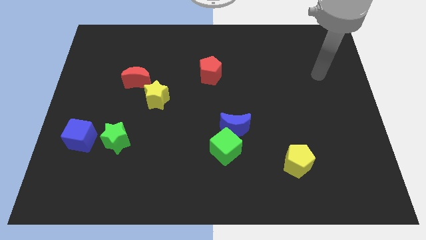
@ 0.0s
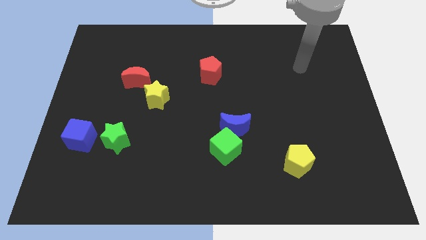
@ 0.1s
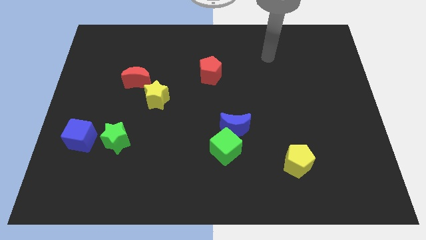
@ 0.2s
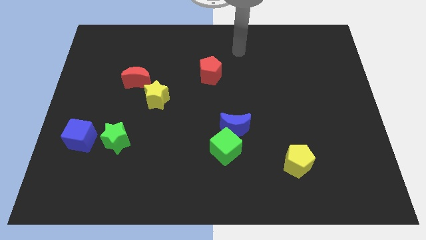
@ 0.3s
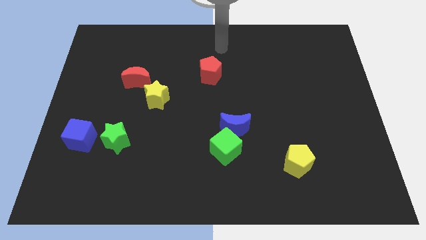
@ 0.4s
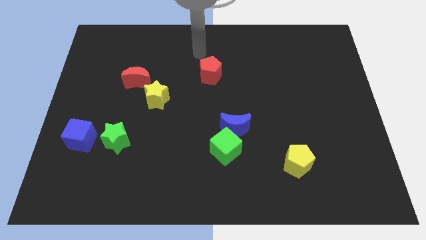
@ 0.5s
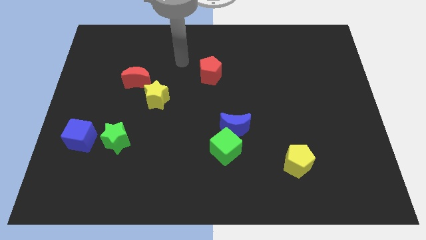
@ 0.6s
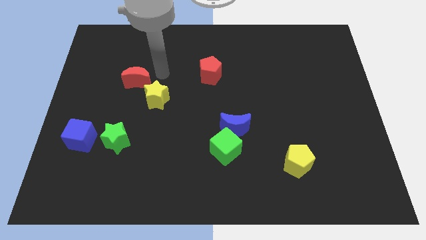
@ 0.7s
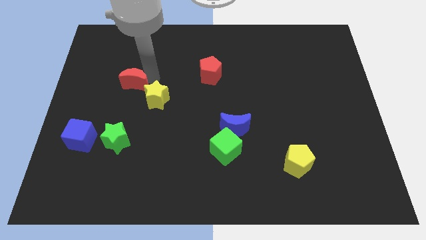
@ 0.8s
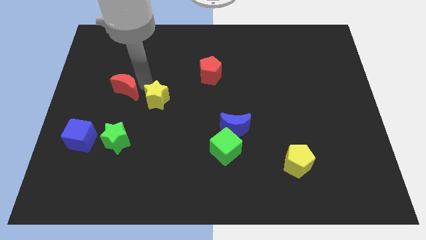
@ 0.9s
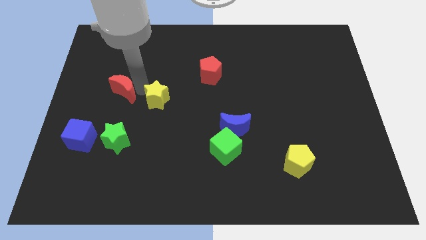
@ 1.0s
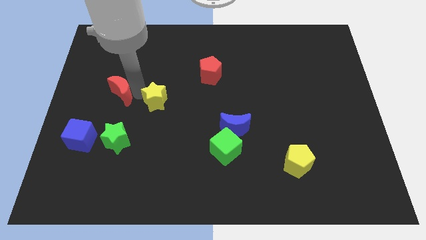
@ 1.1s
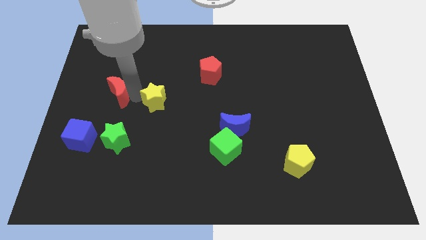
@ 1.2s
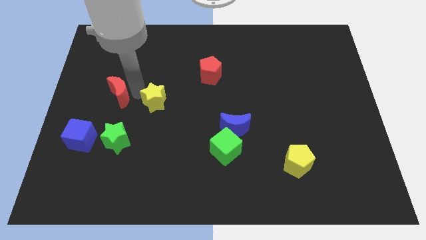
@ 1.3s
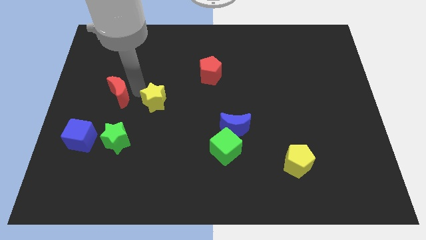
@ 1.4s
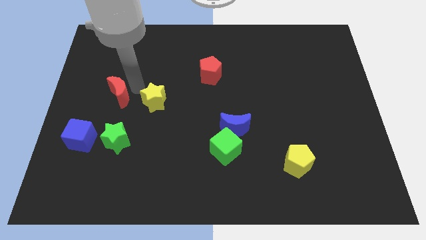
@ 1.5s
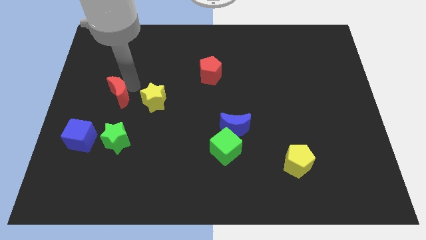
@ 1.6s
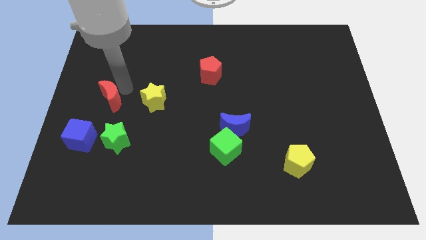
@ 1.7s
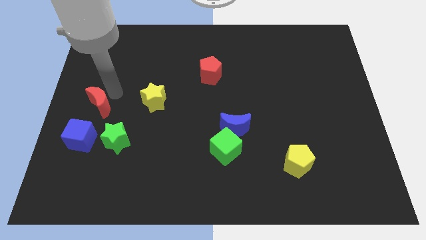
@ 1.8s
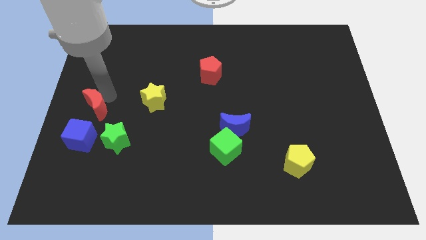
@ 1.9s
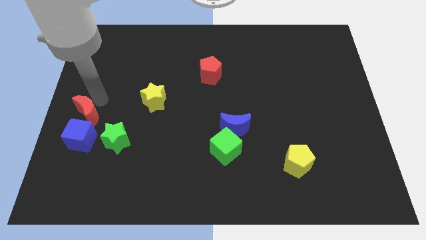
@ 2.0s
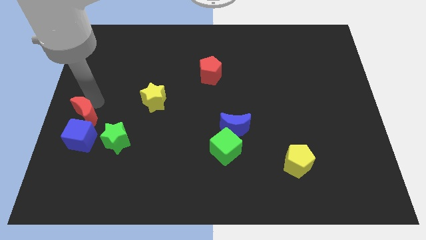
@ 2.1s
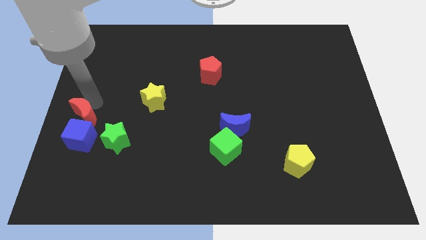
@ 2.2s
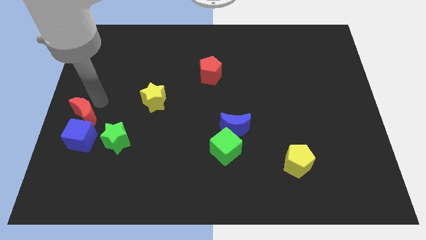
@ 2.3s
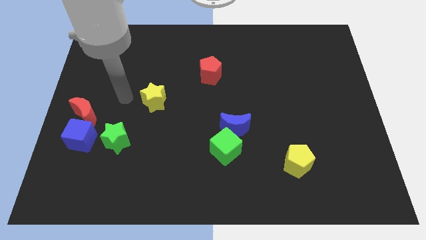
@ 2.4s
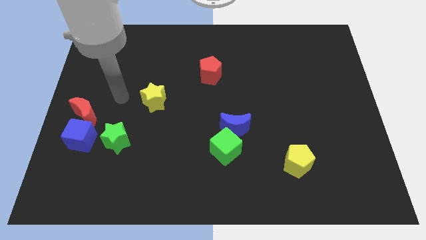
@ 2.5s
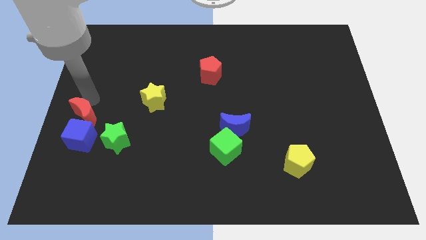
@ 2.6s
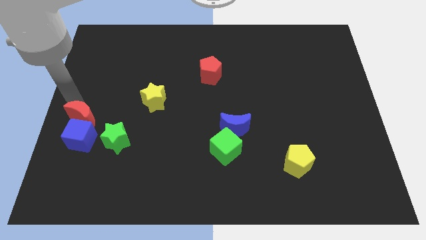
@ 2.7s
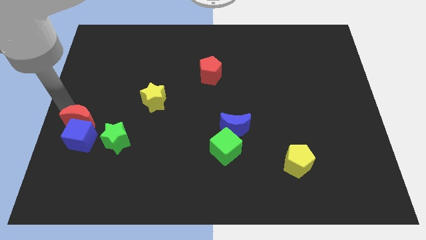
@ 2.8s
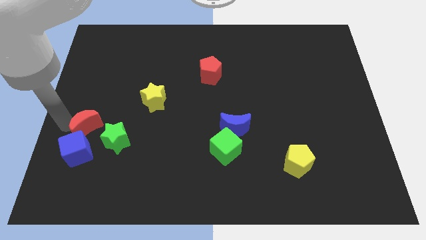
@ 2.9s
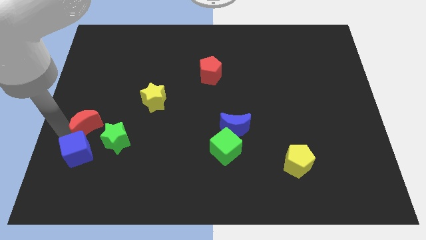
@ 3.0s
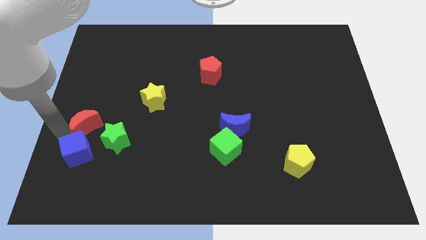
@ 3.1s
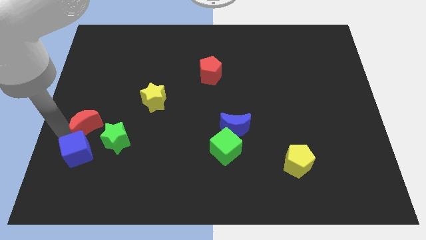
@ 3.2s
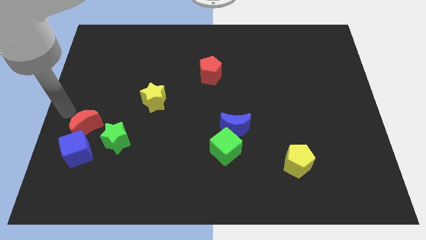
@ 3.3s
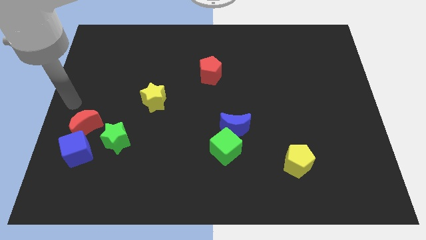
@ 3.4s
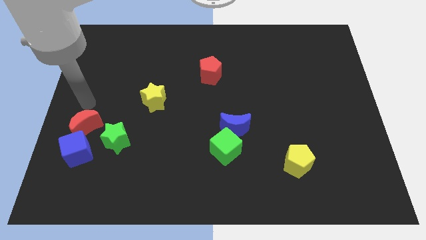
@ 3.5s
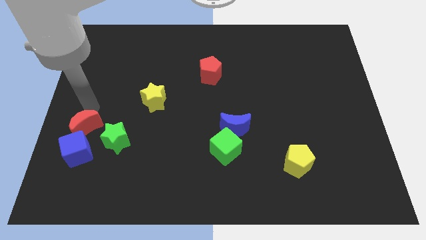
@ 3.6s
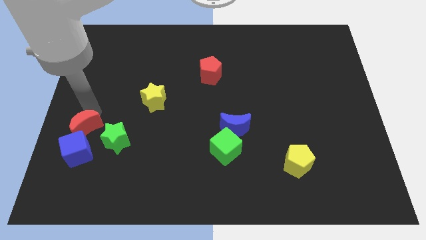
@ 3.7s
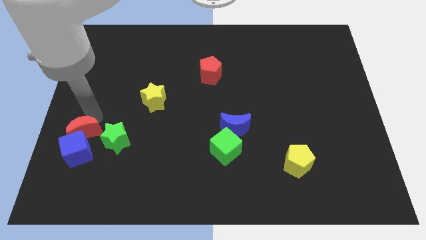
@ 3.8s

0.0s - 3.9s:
slide the red moon to the blue cube

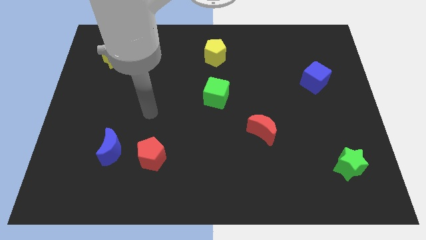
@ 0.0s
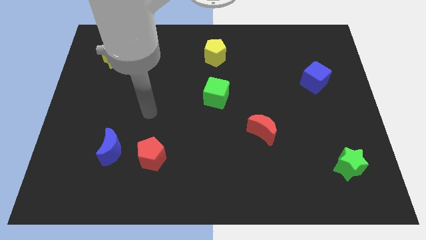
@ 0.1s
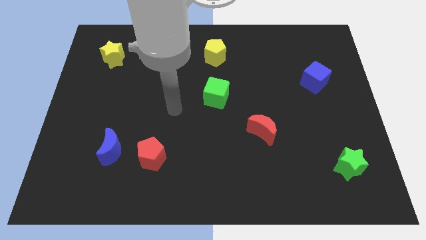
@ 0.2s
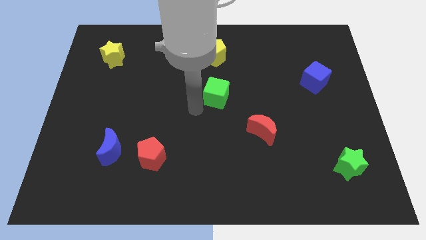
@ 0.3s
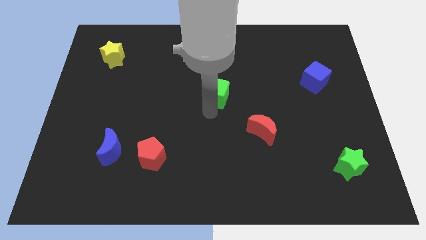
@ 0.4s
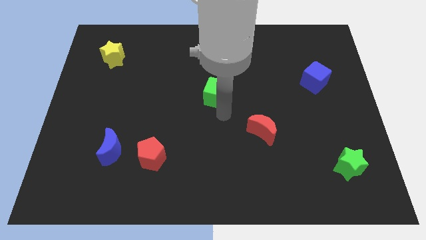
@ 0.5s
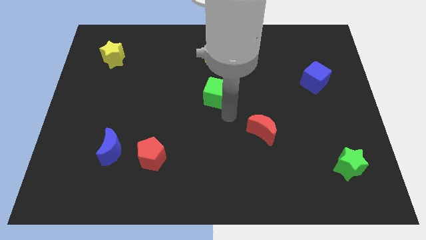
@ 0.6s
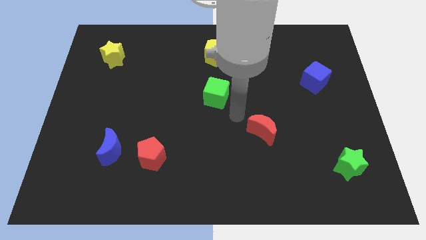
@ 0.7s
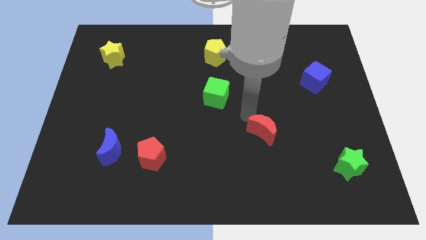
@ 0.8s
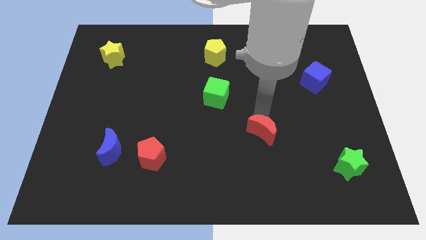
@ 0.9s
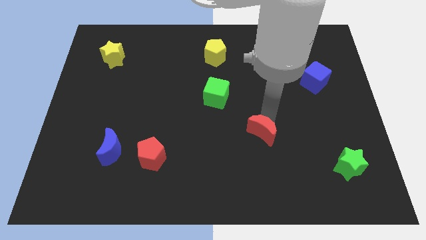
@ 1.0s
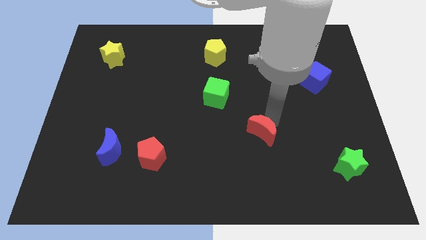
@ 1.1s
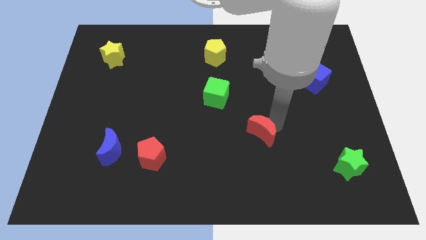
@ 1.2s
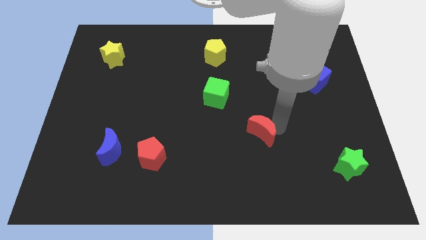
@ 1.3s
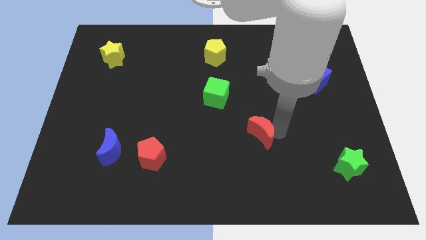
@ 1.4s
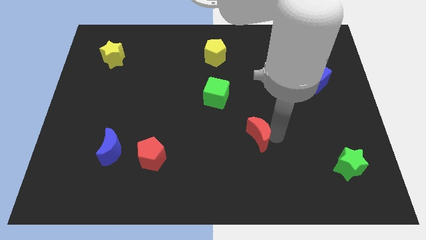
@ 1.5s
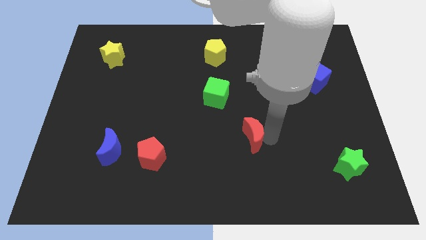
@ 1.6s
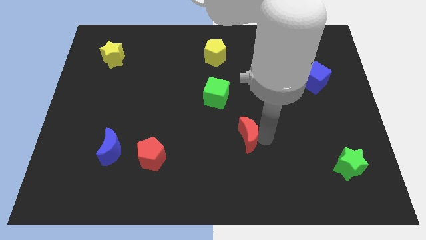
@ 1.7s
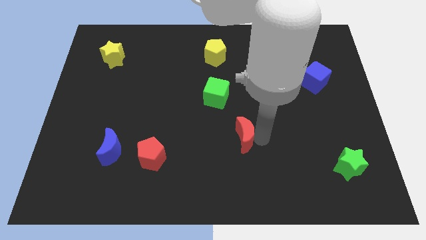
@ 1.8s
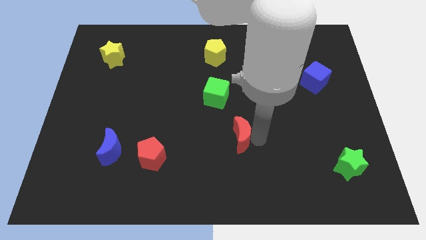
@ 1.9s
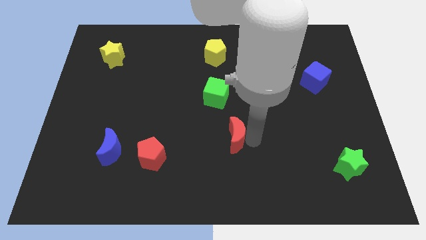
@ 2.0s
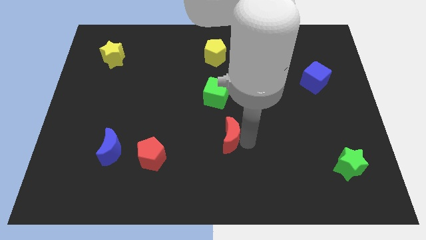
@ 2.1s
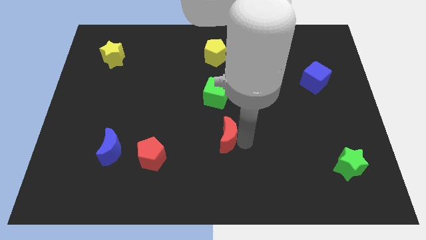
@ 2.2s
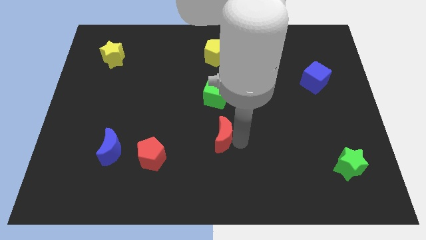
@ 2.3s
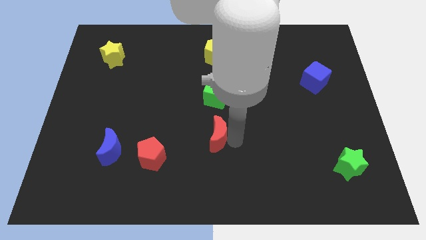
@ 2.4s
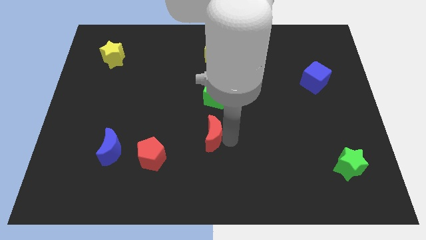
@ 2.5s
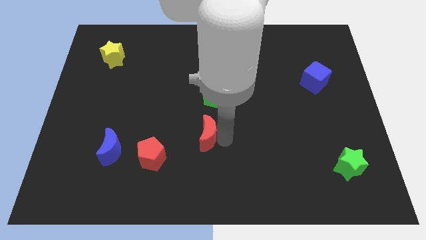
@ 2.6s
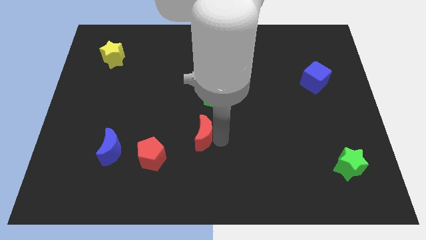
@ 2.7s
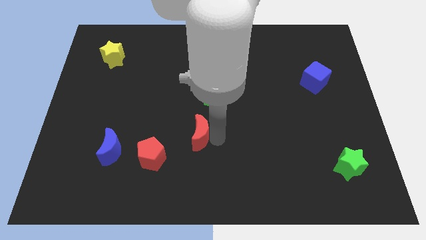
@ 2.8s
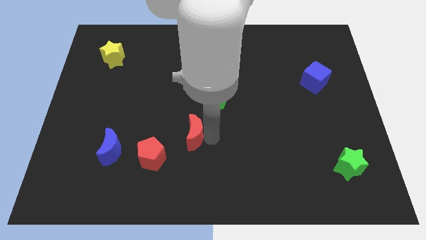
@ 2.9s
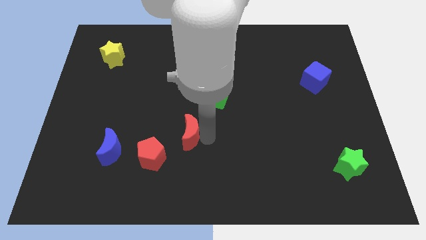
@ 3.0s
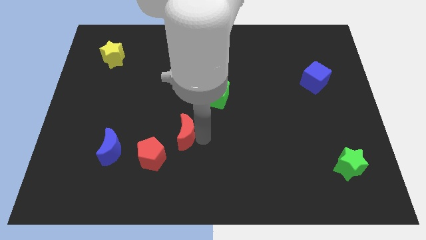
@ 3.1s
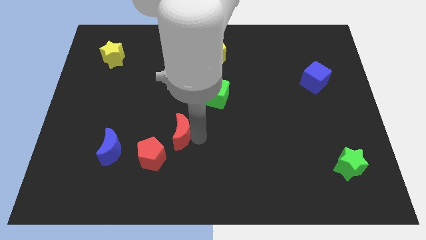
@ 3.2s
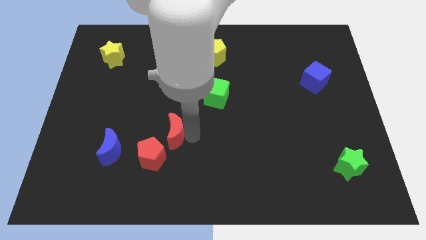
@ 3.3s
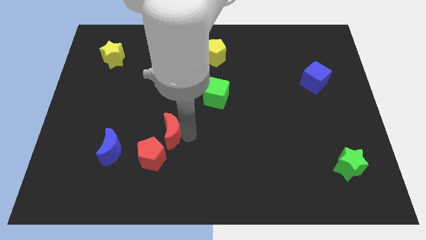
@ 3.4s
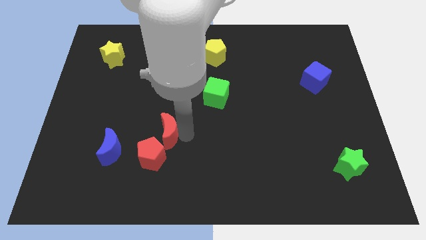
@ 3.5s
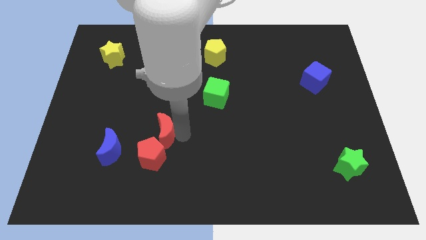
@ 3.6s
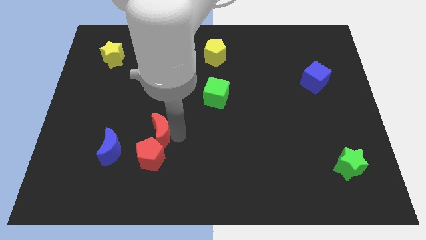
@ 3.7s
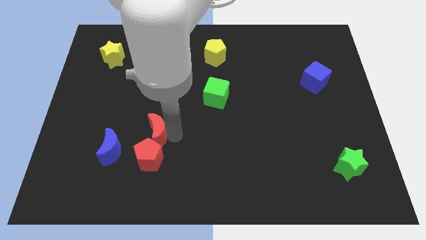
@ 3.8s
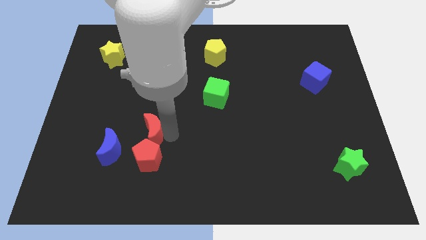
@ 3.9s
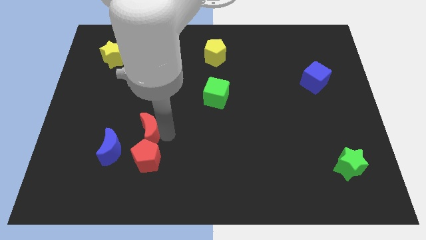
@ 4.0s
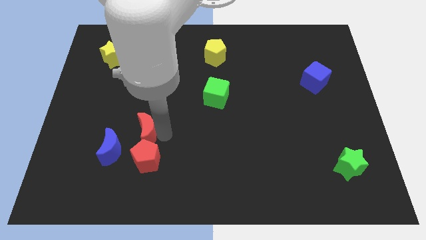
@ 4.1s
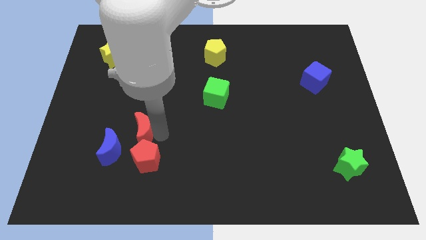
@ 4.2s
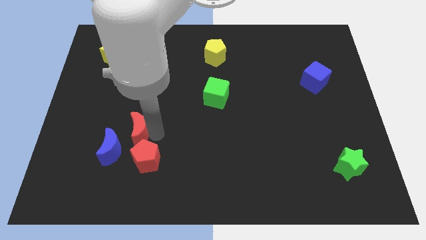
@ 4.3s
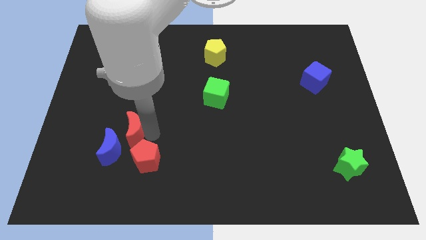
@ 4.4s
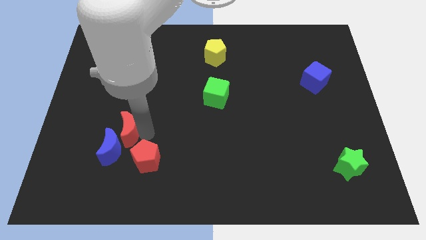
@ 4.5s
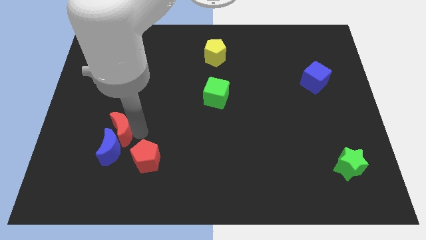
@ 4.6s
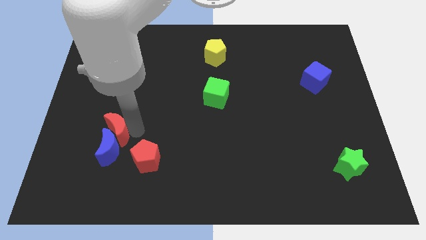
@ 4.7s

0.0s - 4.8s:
put the red moon towards the blue moon
